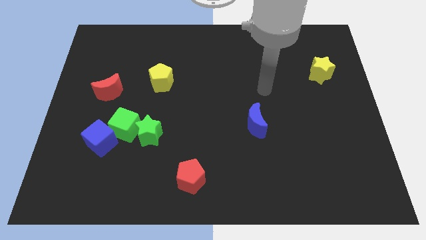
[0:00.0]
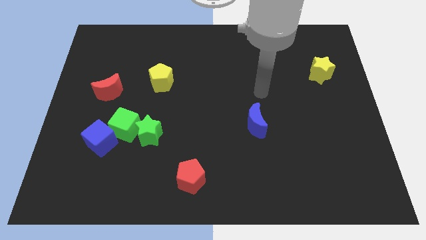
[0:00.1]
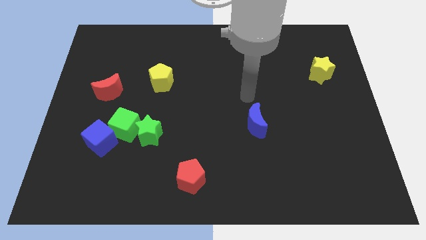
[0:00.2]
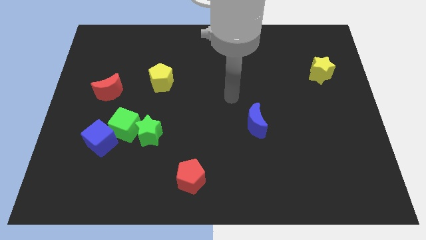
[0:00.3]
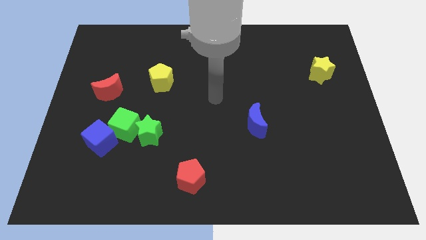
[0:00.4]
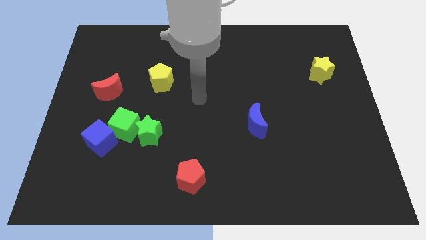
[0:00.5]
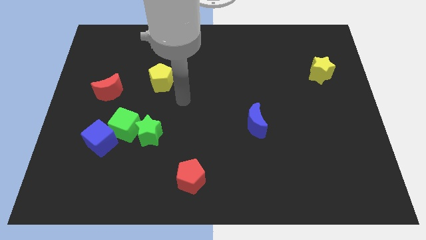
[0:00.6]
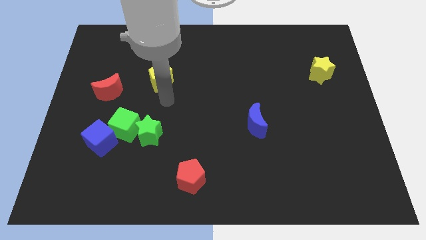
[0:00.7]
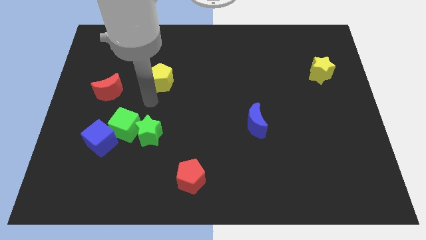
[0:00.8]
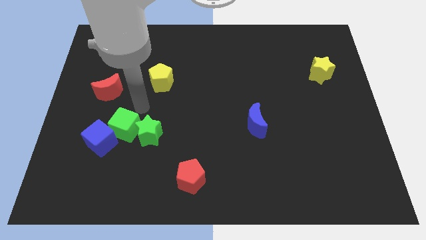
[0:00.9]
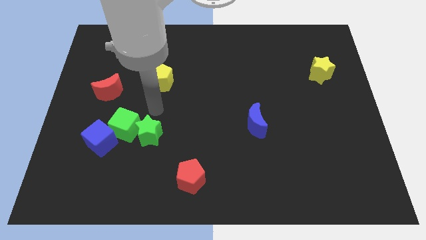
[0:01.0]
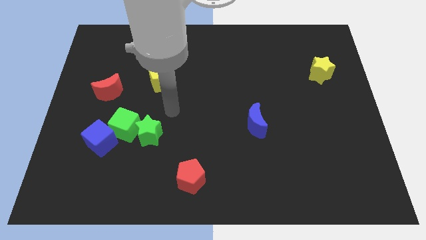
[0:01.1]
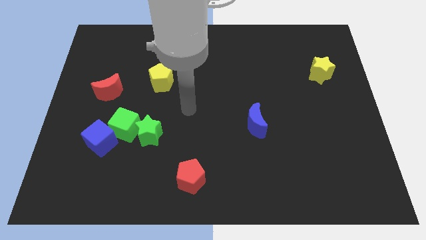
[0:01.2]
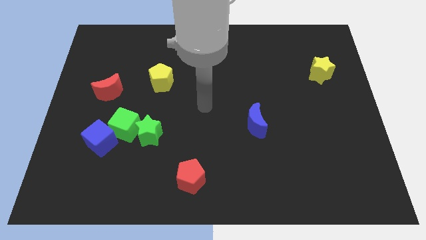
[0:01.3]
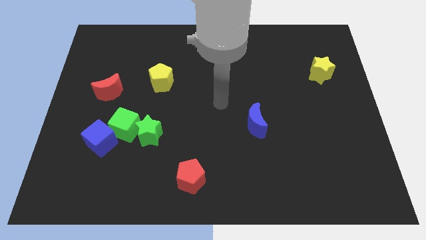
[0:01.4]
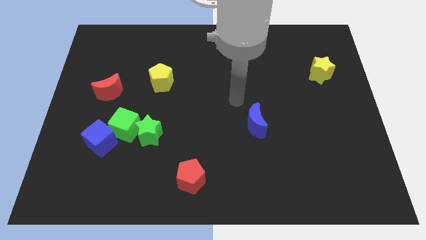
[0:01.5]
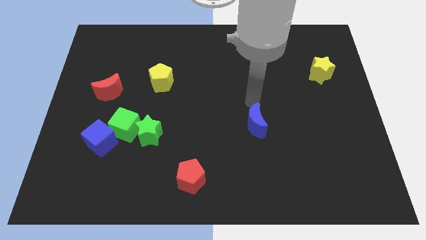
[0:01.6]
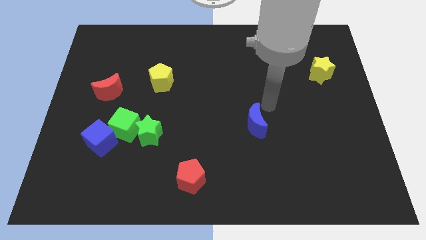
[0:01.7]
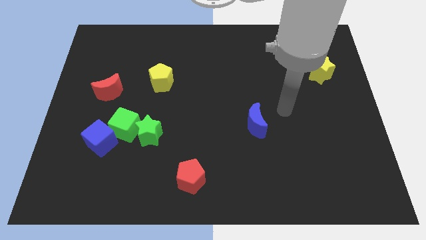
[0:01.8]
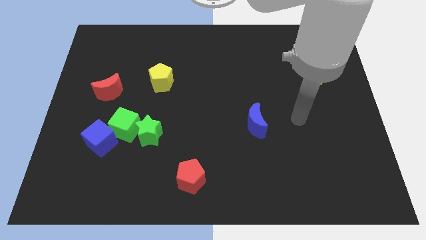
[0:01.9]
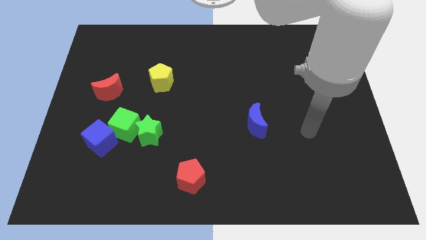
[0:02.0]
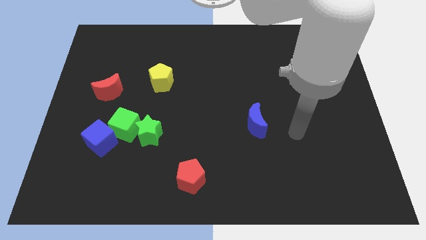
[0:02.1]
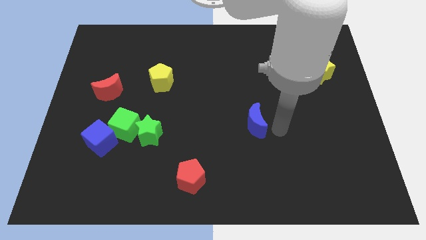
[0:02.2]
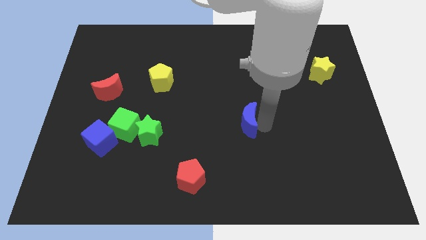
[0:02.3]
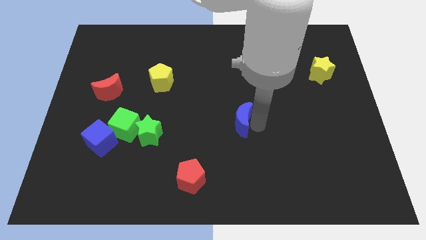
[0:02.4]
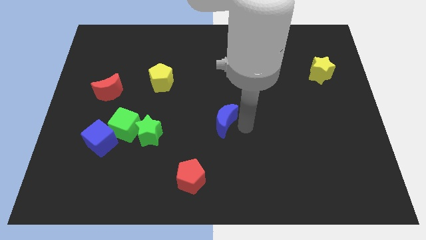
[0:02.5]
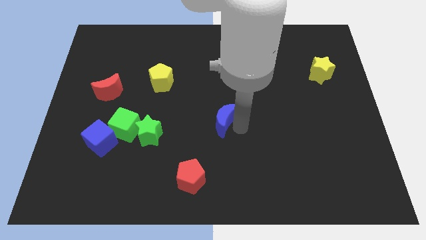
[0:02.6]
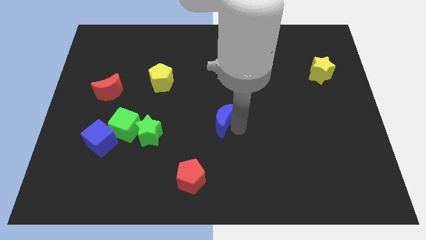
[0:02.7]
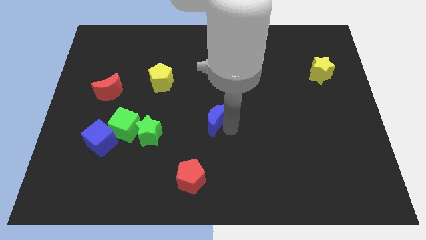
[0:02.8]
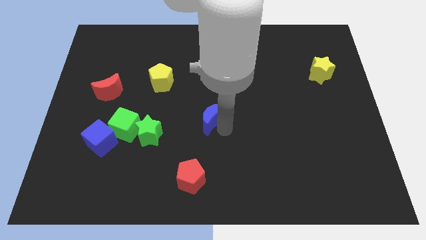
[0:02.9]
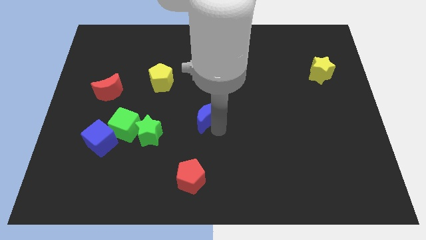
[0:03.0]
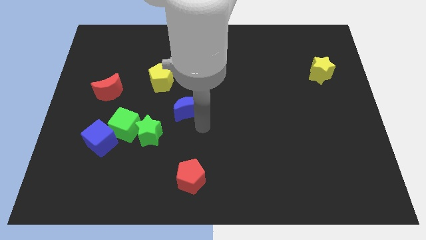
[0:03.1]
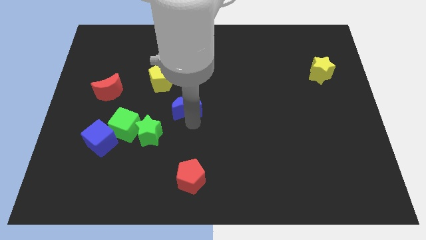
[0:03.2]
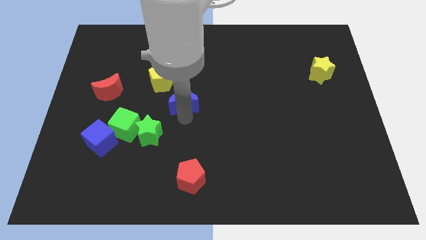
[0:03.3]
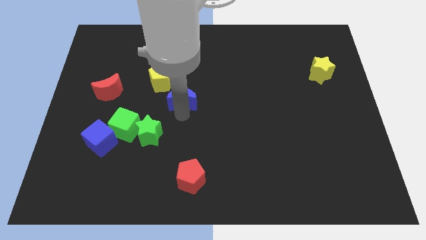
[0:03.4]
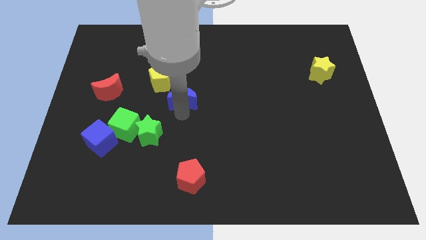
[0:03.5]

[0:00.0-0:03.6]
move blue crescent towards yellow pentagon

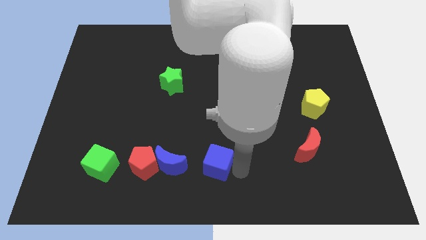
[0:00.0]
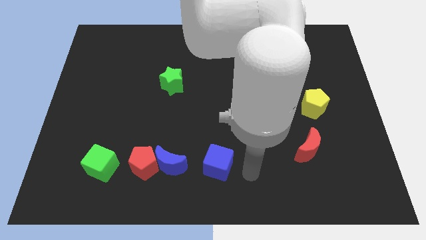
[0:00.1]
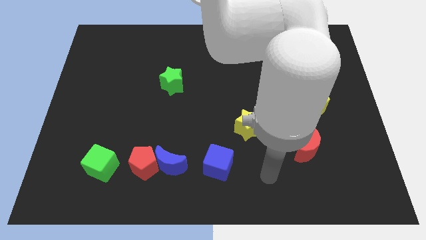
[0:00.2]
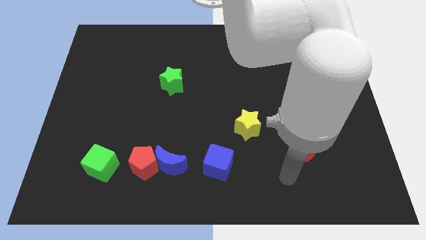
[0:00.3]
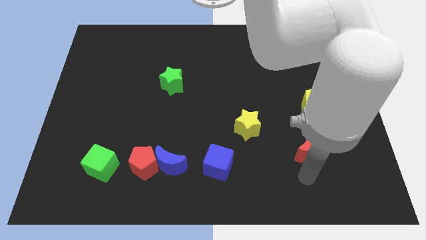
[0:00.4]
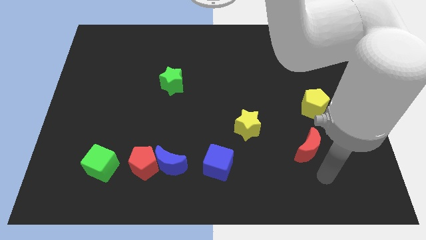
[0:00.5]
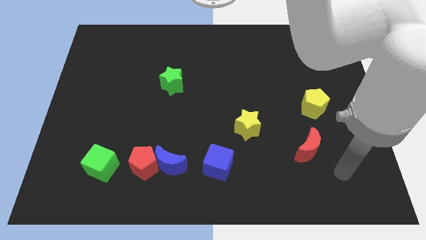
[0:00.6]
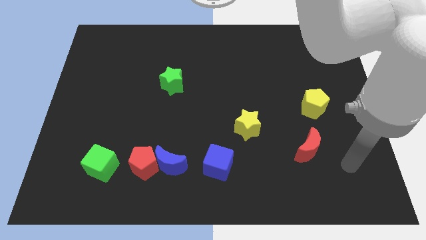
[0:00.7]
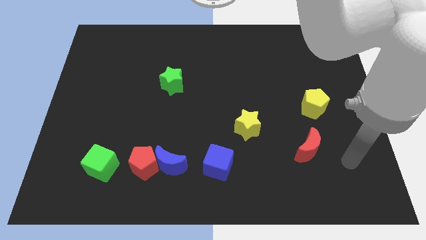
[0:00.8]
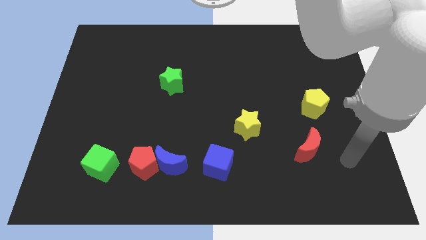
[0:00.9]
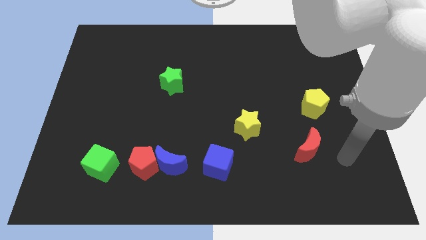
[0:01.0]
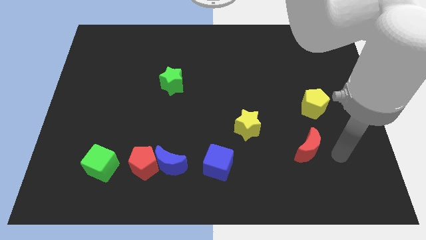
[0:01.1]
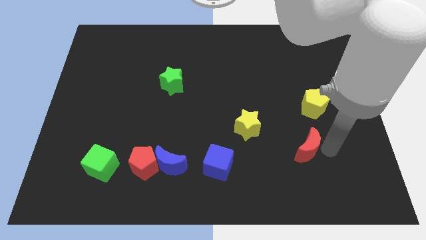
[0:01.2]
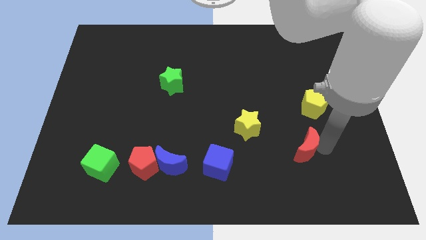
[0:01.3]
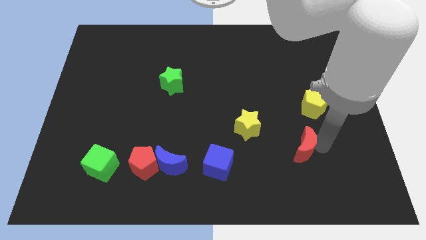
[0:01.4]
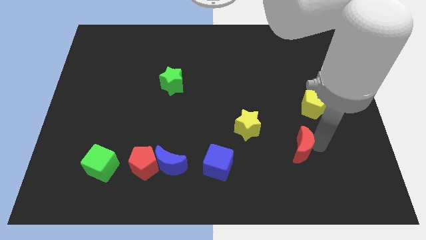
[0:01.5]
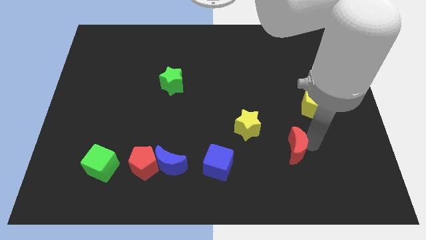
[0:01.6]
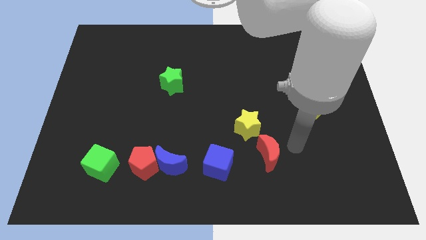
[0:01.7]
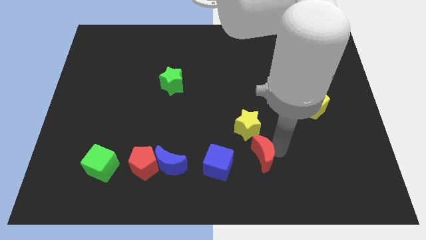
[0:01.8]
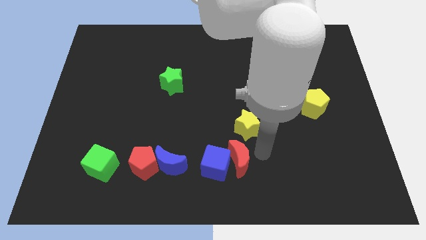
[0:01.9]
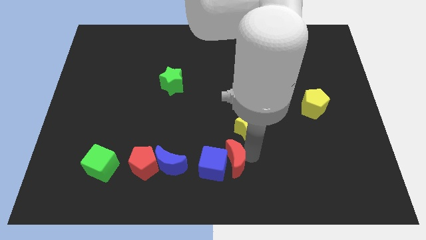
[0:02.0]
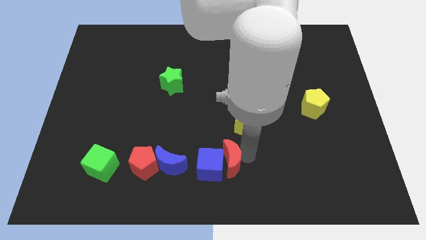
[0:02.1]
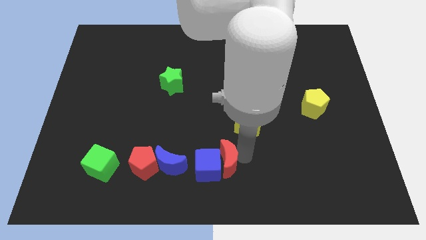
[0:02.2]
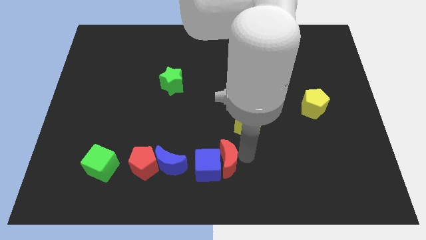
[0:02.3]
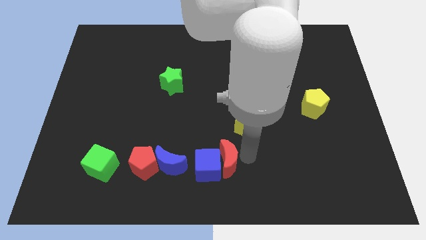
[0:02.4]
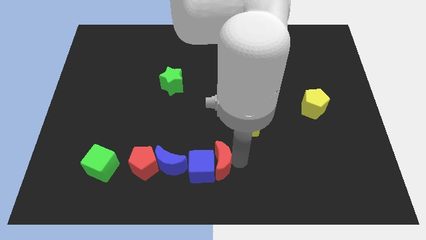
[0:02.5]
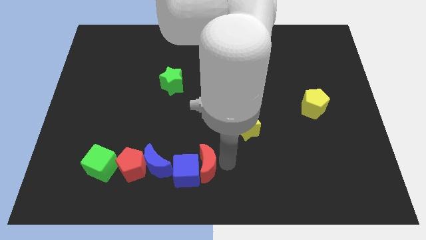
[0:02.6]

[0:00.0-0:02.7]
push the red crescent into the blue cube

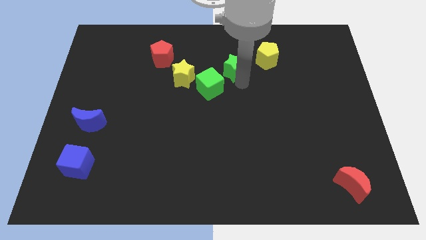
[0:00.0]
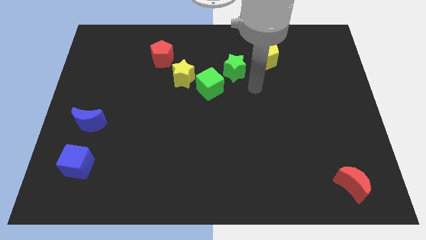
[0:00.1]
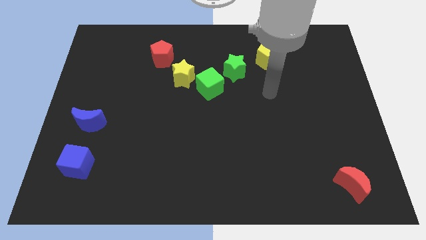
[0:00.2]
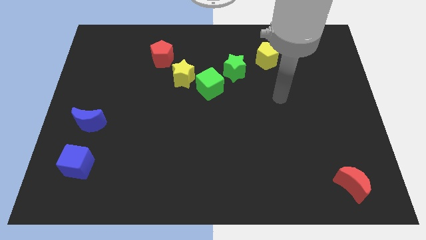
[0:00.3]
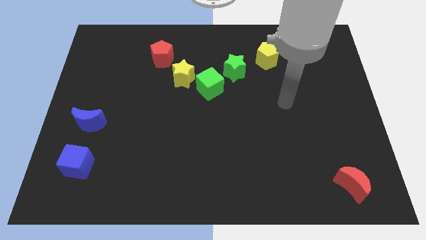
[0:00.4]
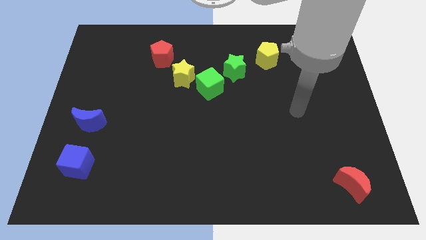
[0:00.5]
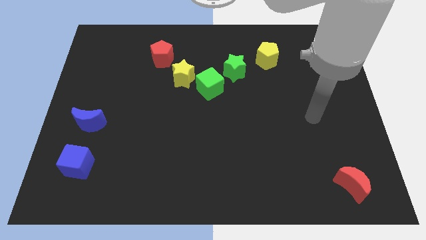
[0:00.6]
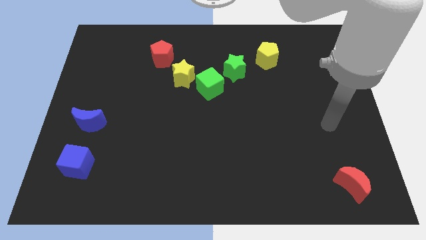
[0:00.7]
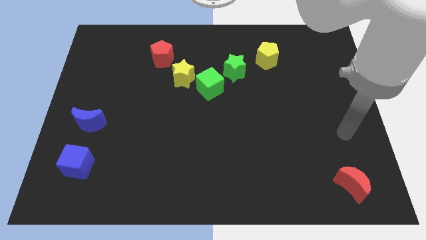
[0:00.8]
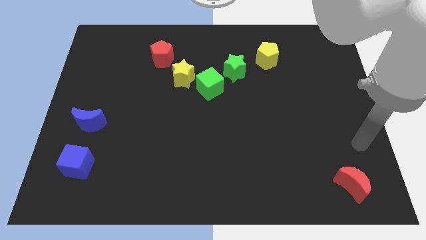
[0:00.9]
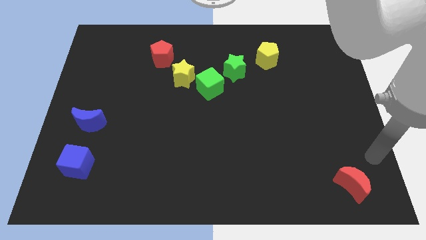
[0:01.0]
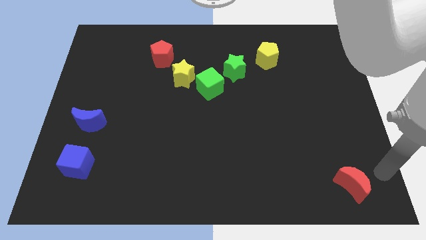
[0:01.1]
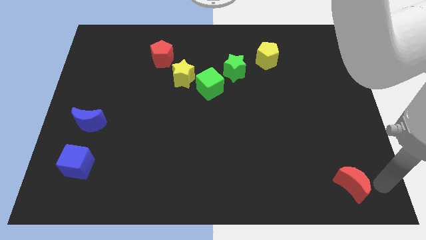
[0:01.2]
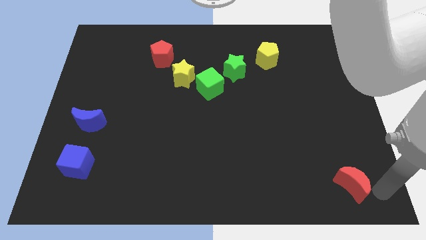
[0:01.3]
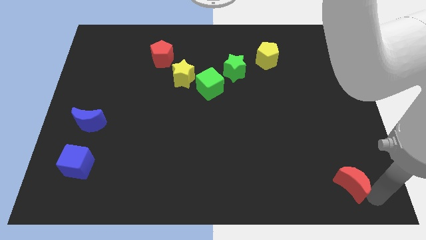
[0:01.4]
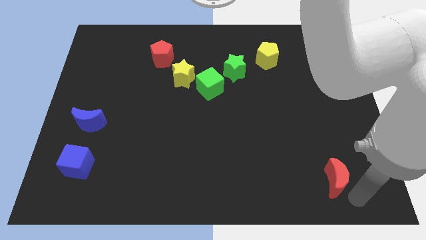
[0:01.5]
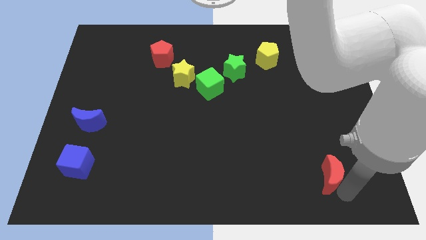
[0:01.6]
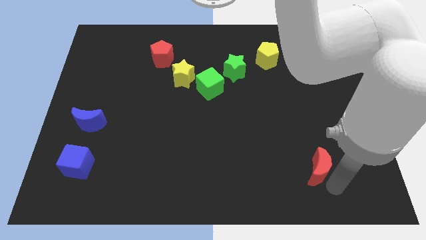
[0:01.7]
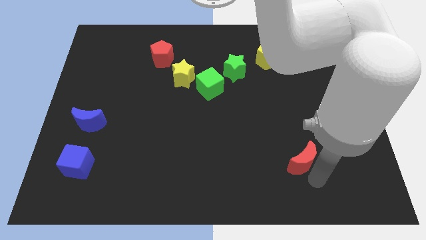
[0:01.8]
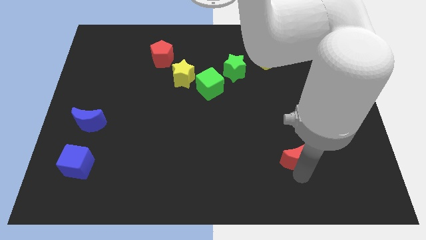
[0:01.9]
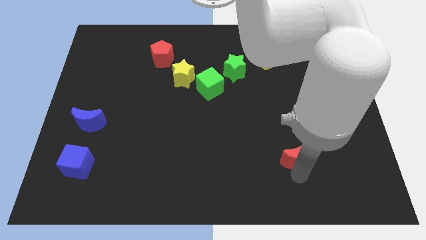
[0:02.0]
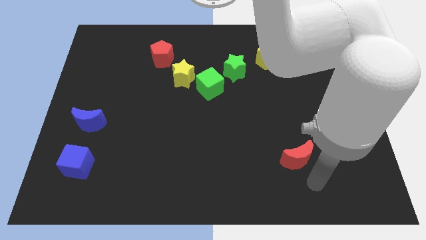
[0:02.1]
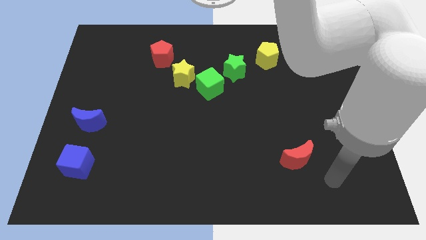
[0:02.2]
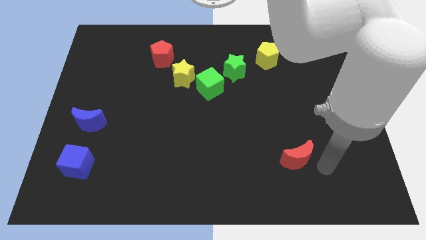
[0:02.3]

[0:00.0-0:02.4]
move the red moon to the center of the board

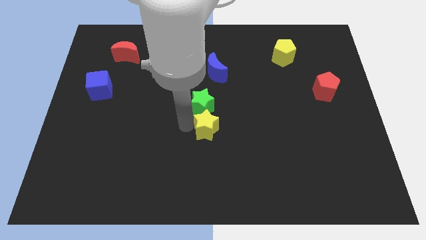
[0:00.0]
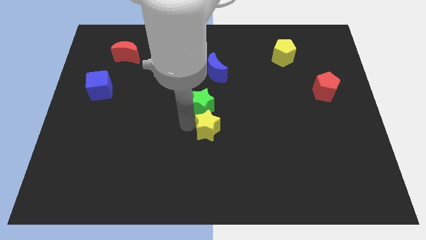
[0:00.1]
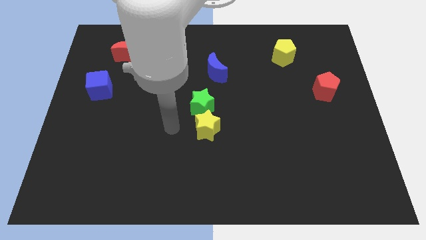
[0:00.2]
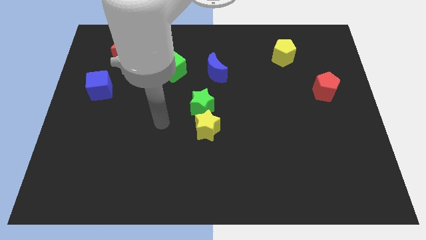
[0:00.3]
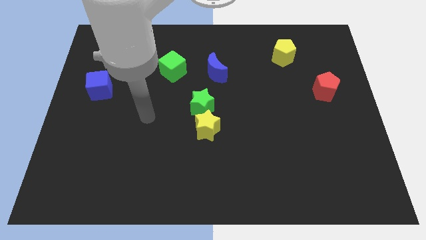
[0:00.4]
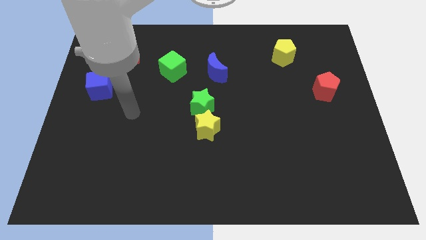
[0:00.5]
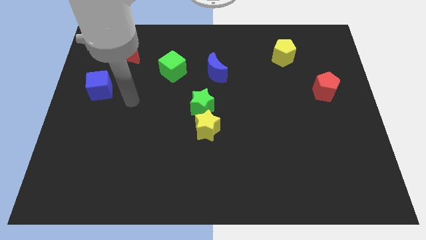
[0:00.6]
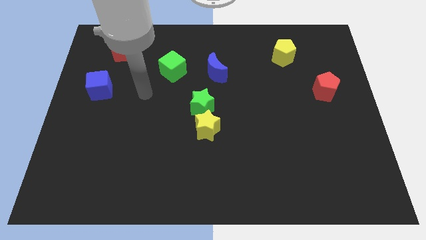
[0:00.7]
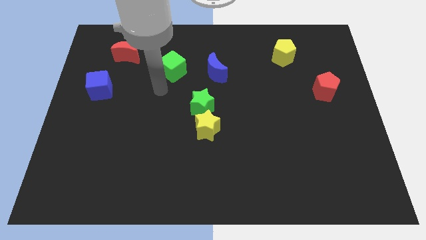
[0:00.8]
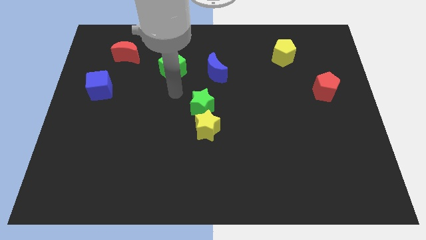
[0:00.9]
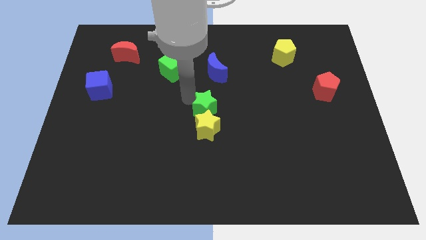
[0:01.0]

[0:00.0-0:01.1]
move your arm towards the green star
